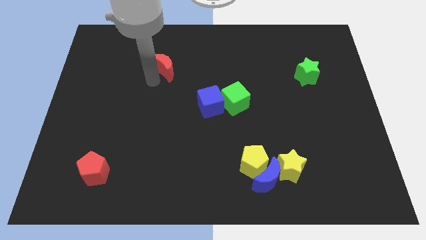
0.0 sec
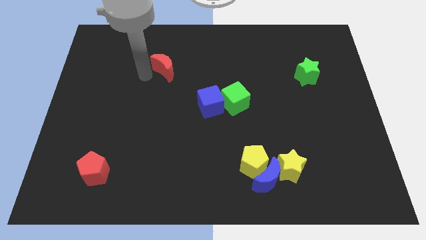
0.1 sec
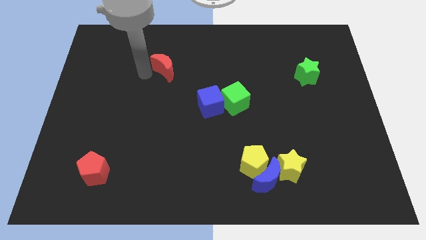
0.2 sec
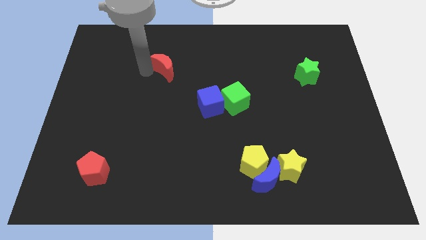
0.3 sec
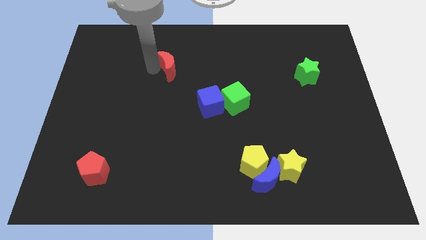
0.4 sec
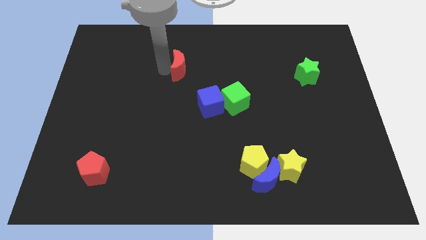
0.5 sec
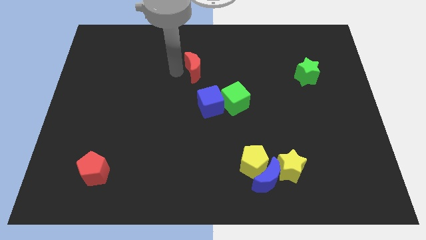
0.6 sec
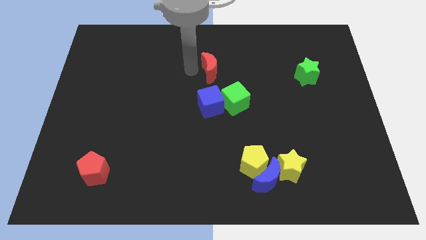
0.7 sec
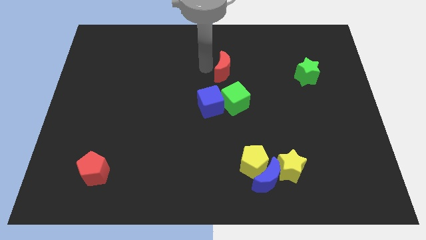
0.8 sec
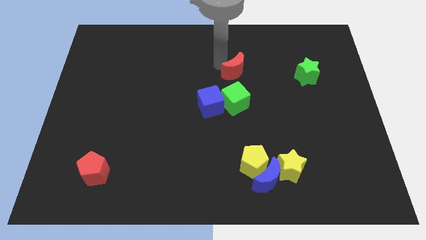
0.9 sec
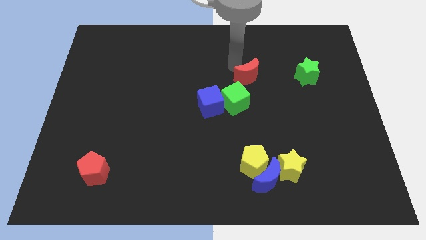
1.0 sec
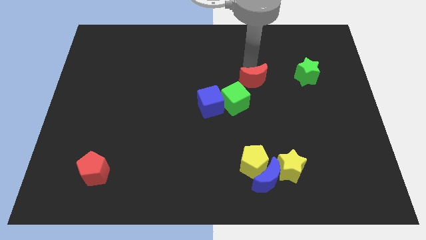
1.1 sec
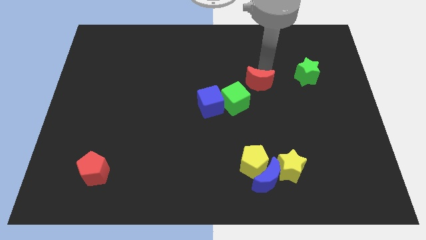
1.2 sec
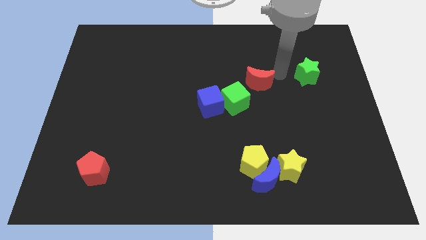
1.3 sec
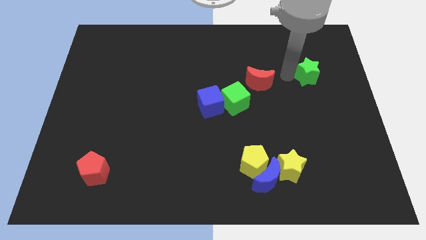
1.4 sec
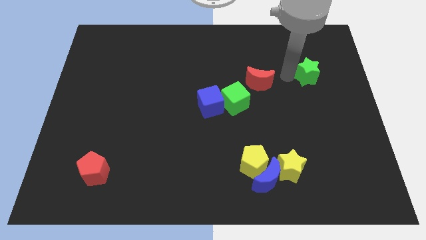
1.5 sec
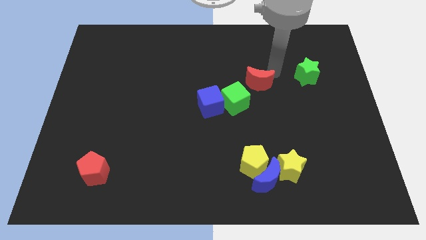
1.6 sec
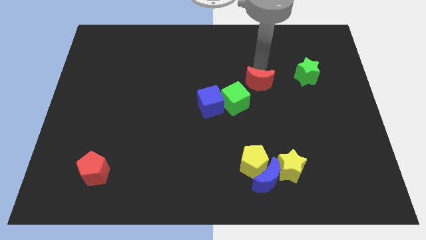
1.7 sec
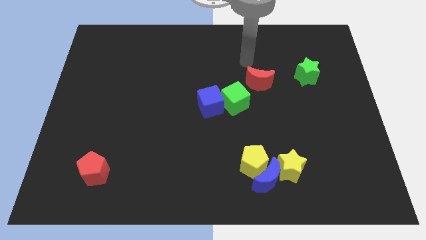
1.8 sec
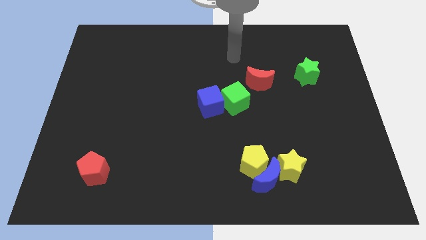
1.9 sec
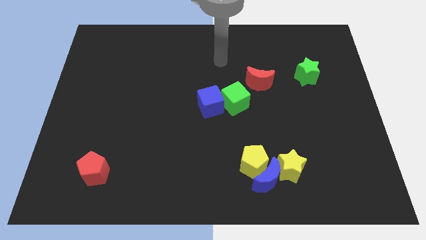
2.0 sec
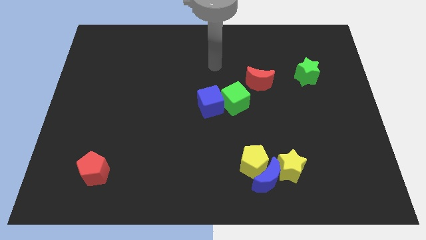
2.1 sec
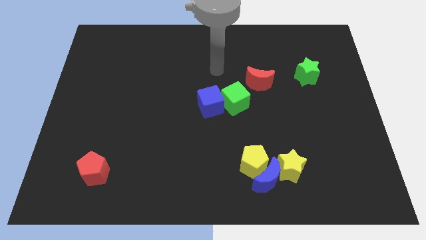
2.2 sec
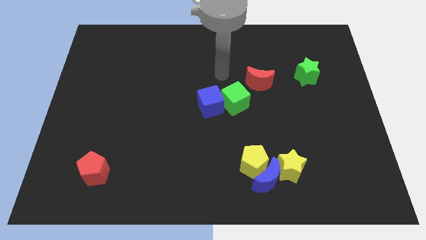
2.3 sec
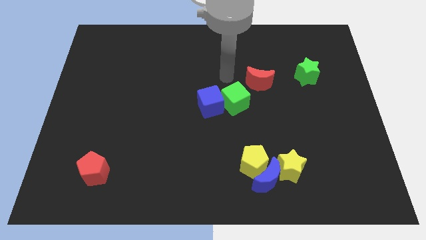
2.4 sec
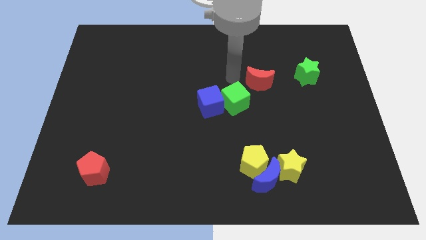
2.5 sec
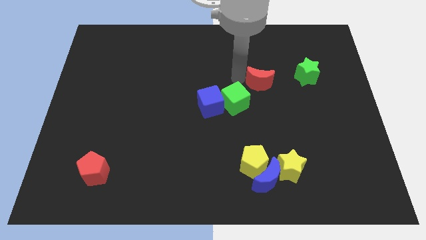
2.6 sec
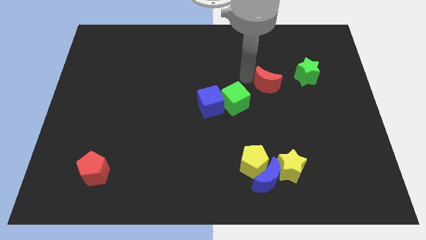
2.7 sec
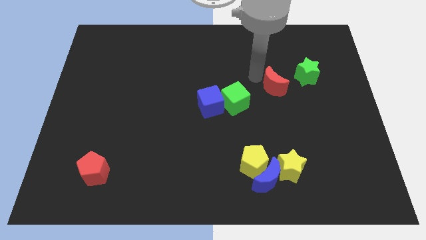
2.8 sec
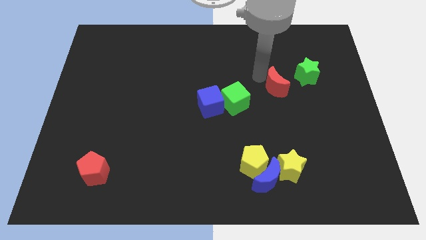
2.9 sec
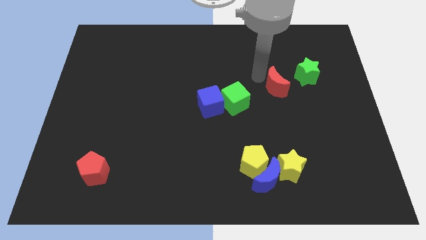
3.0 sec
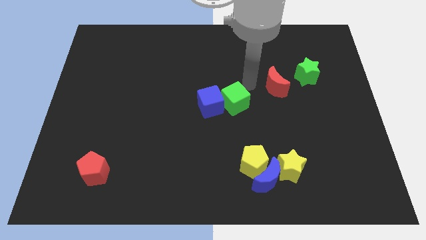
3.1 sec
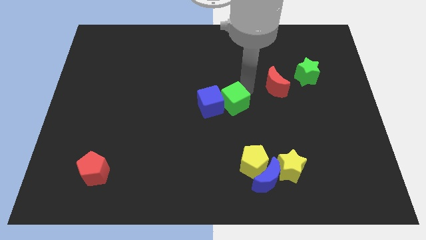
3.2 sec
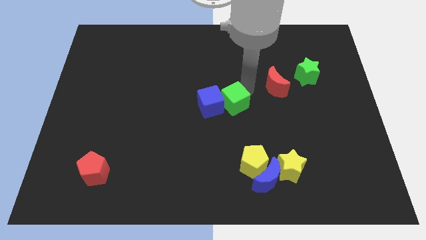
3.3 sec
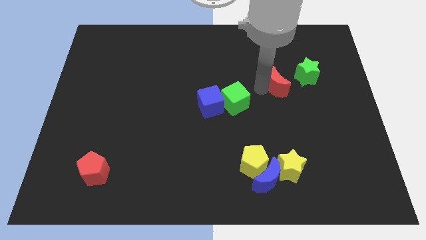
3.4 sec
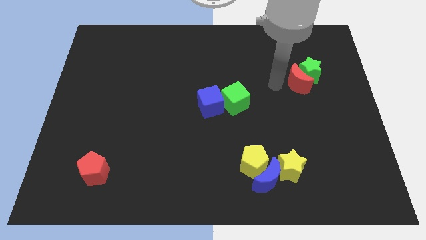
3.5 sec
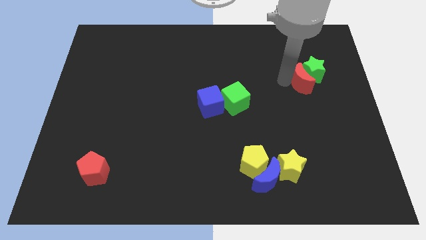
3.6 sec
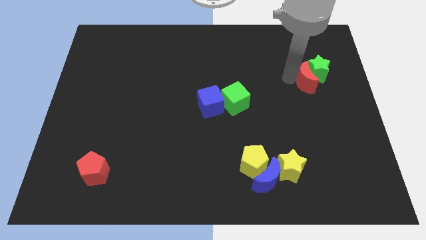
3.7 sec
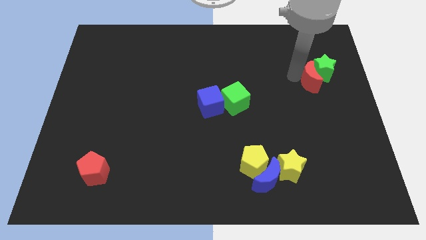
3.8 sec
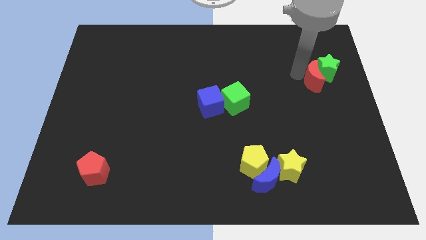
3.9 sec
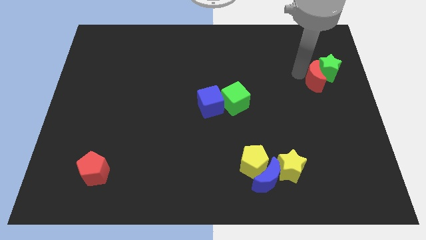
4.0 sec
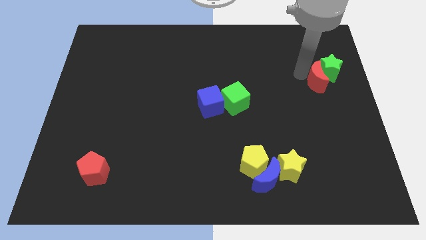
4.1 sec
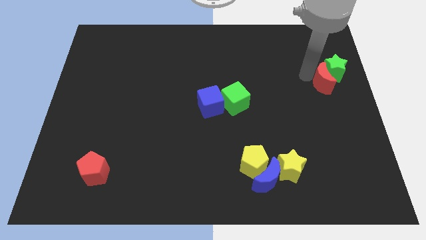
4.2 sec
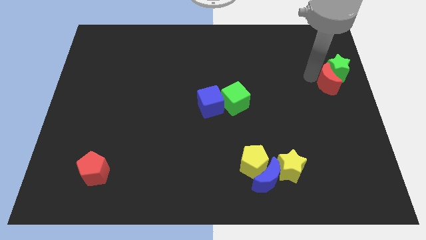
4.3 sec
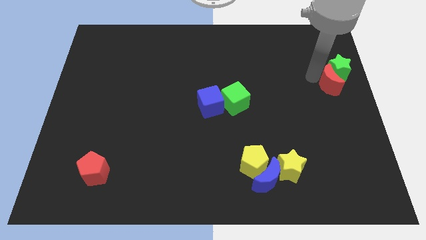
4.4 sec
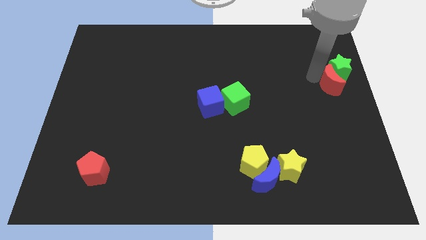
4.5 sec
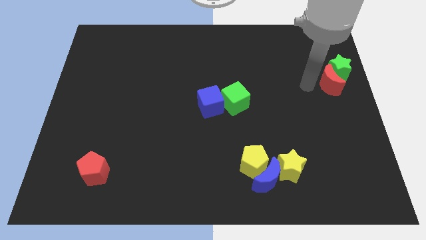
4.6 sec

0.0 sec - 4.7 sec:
push the red crescent into the green star

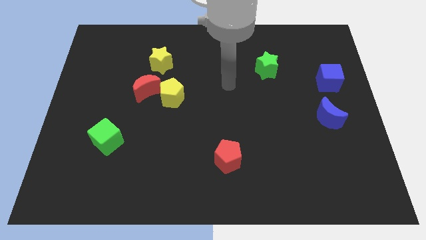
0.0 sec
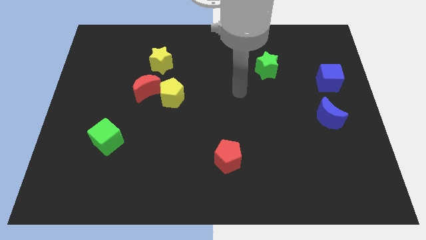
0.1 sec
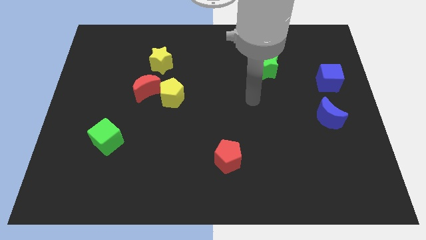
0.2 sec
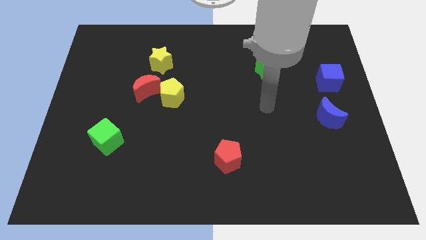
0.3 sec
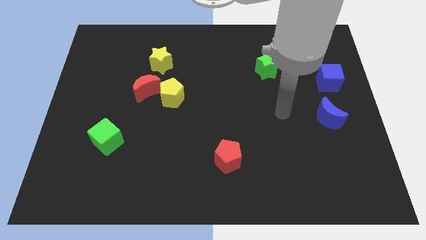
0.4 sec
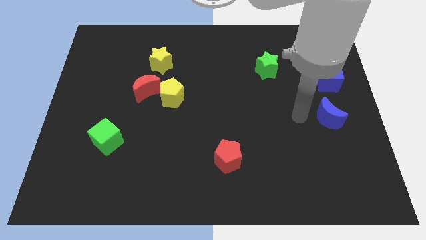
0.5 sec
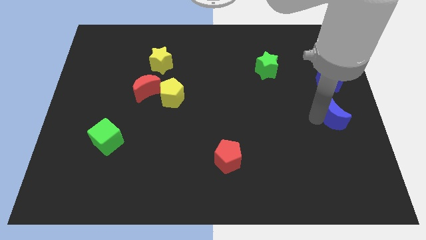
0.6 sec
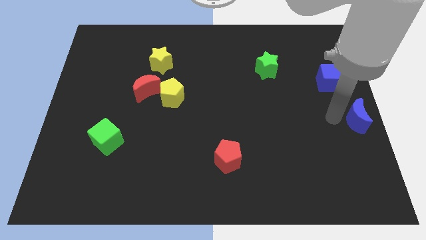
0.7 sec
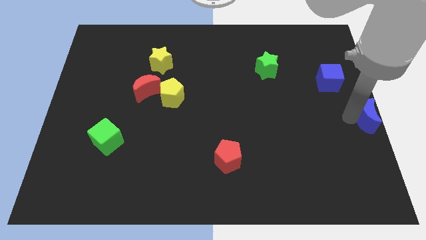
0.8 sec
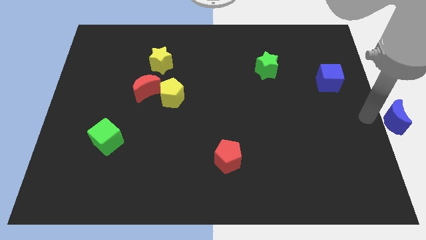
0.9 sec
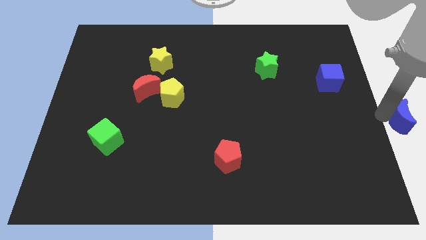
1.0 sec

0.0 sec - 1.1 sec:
push the blue moon to the middle right of the board

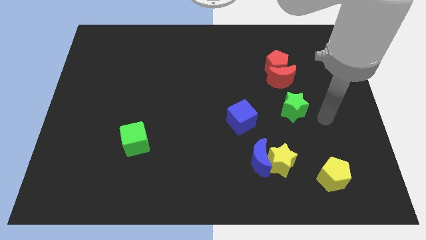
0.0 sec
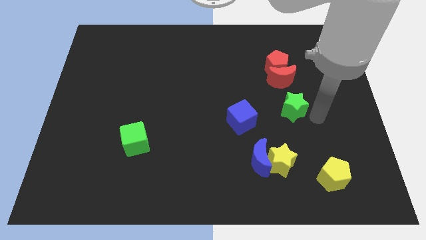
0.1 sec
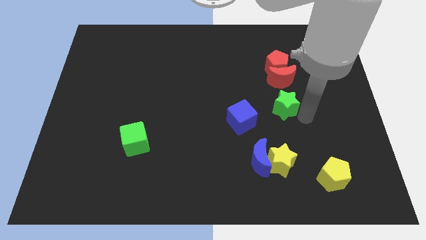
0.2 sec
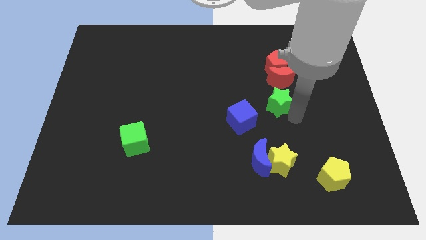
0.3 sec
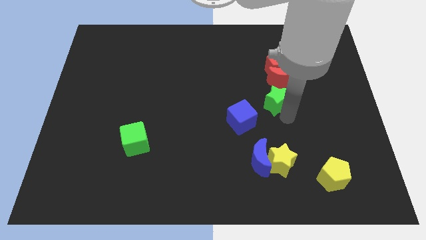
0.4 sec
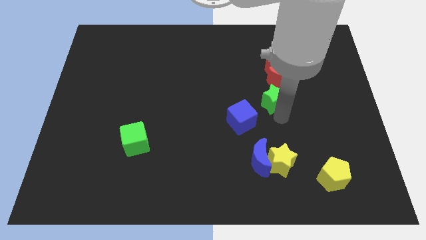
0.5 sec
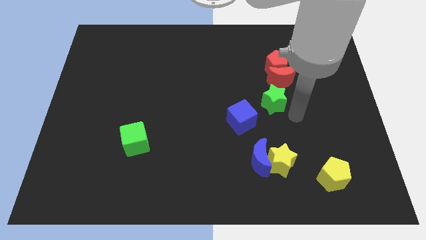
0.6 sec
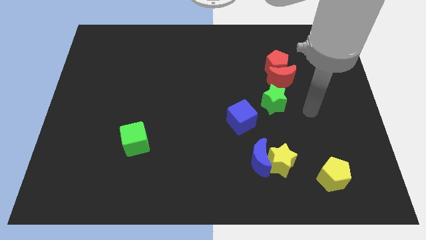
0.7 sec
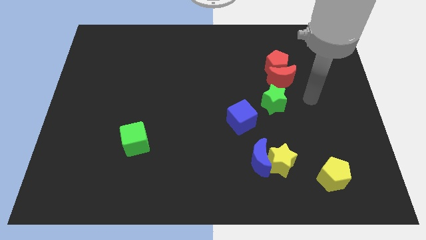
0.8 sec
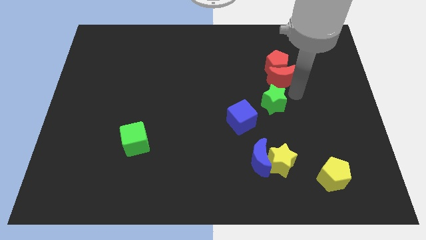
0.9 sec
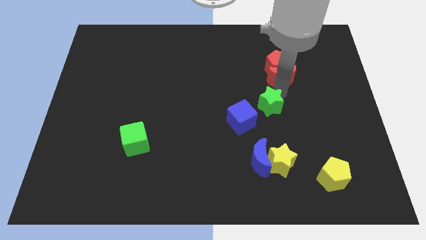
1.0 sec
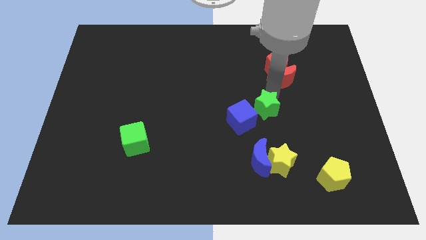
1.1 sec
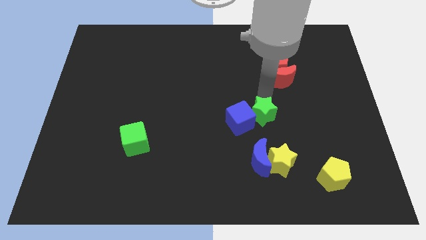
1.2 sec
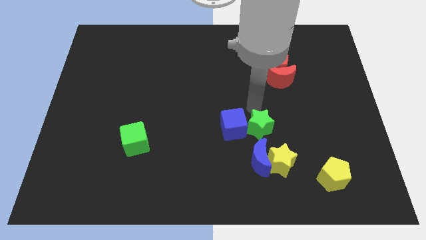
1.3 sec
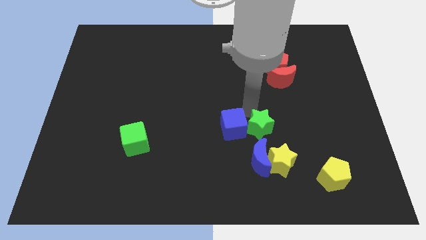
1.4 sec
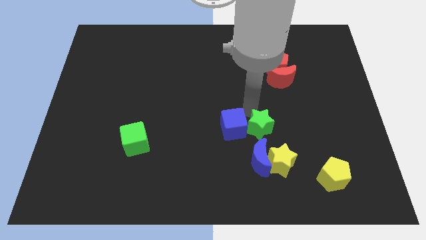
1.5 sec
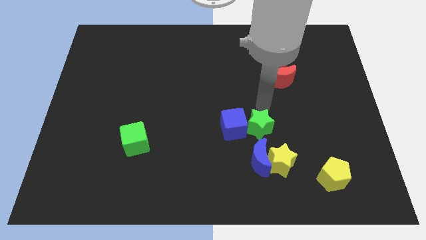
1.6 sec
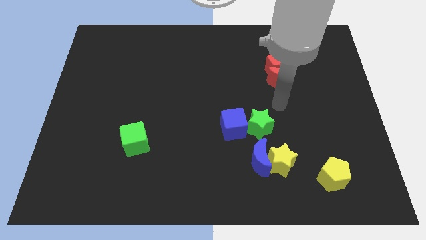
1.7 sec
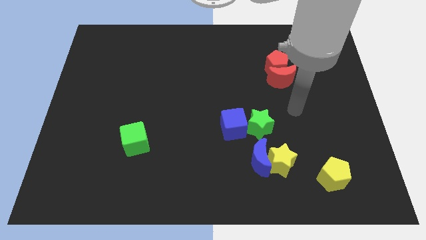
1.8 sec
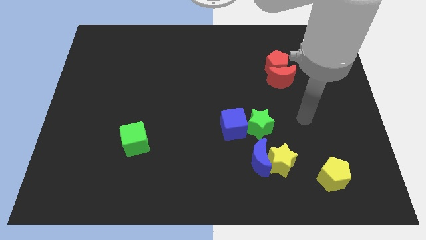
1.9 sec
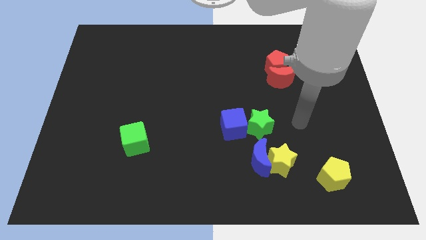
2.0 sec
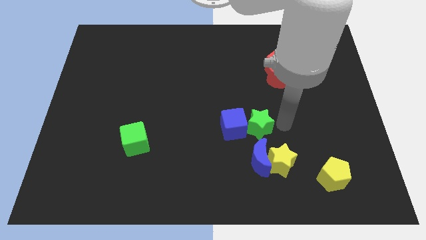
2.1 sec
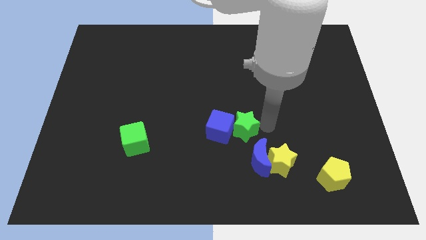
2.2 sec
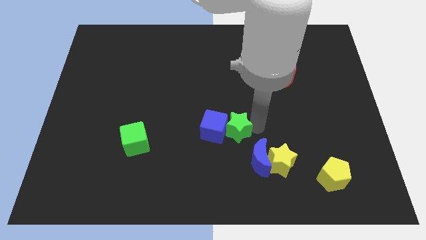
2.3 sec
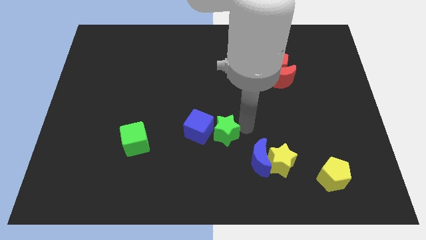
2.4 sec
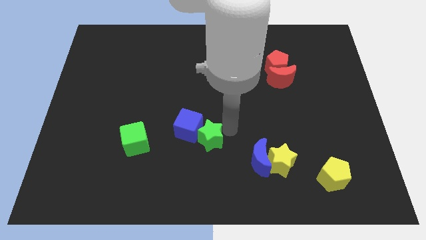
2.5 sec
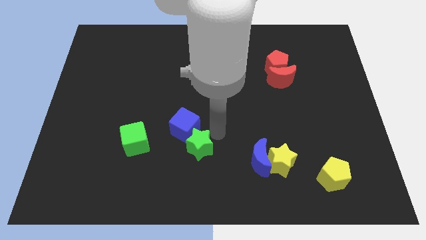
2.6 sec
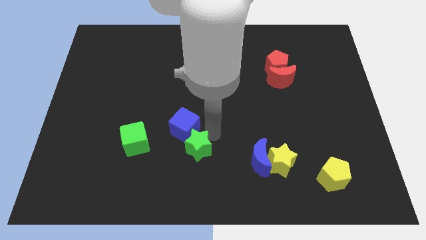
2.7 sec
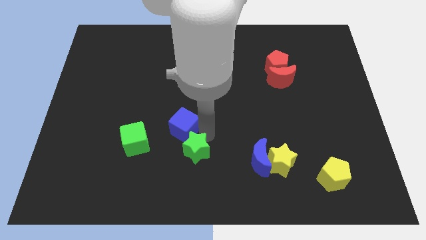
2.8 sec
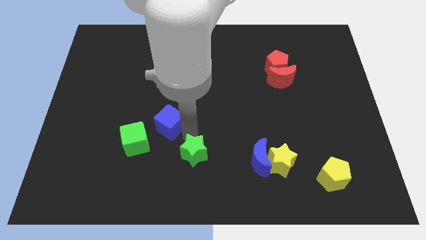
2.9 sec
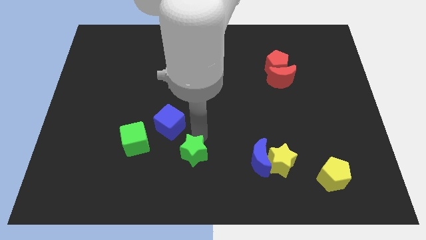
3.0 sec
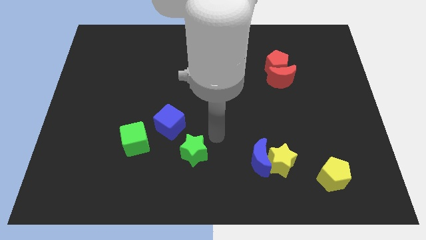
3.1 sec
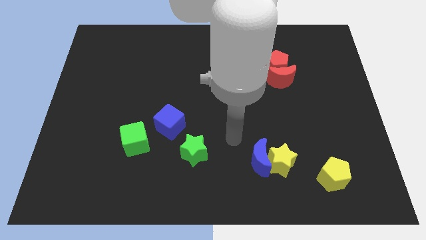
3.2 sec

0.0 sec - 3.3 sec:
slide the blue cube and green star towards the green cube to form a triangle
